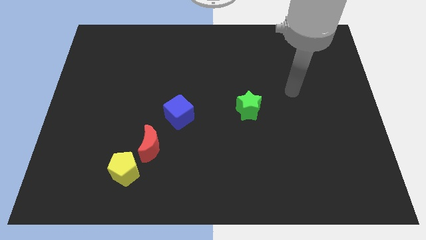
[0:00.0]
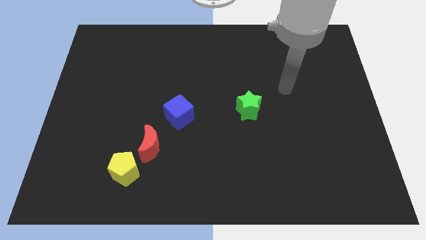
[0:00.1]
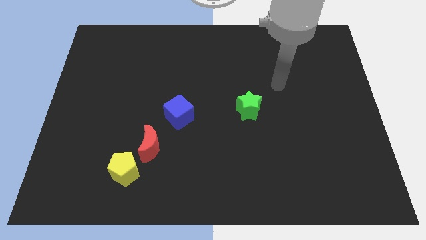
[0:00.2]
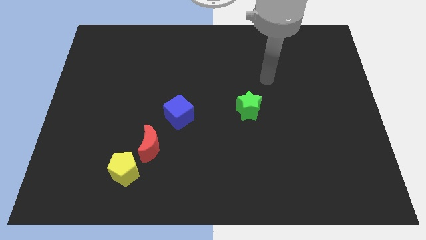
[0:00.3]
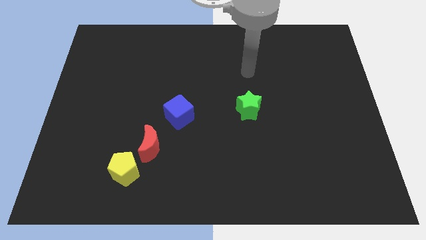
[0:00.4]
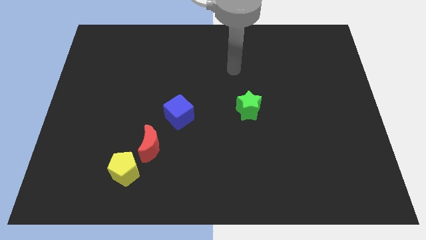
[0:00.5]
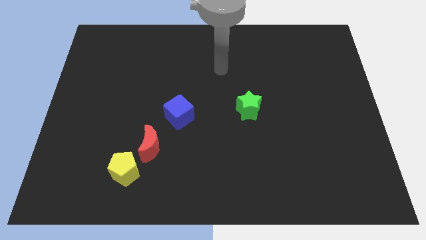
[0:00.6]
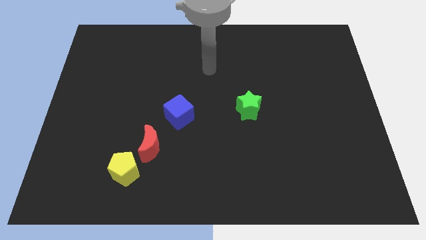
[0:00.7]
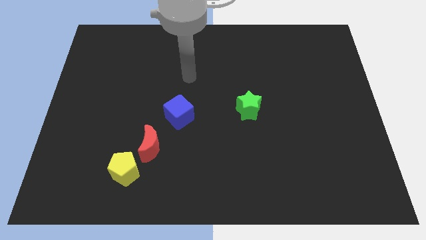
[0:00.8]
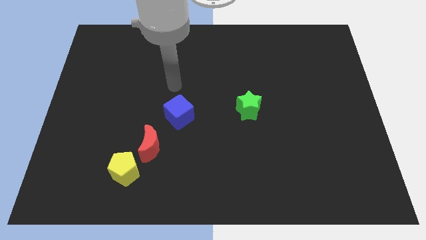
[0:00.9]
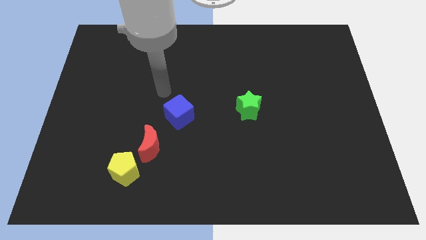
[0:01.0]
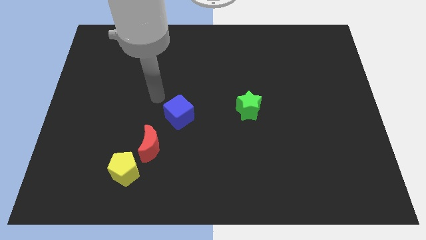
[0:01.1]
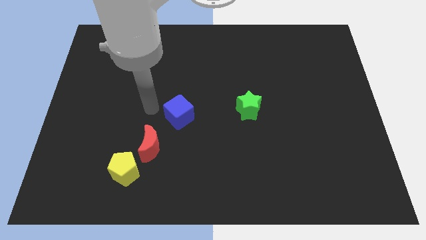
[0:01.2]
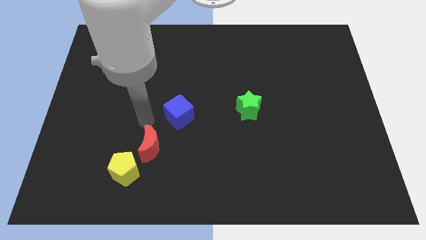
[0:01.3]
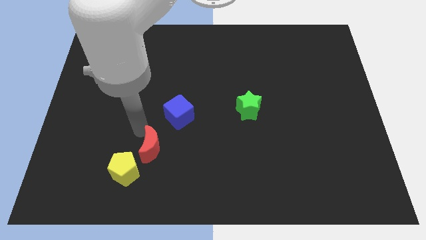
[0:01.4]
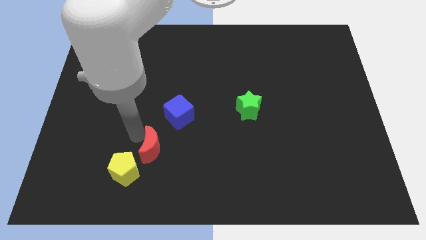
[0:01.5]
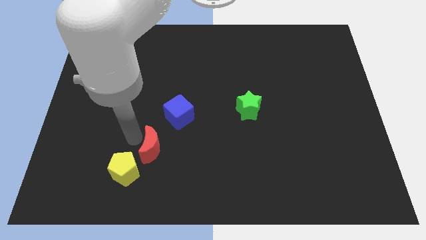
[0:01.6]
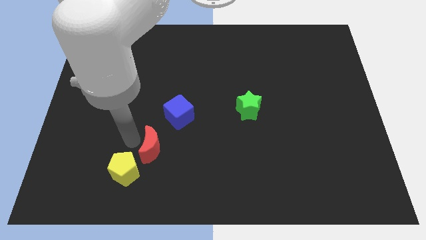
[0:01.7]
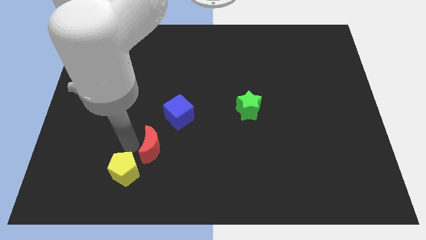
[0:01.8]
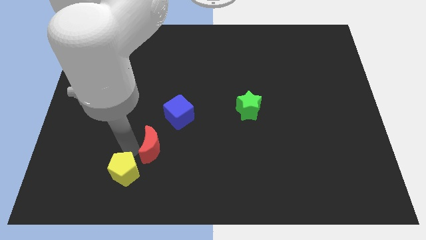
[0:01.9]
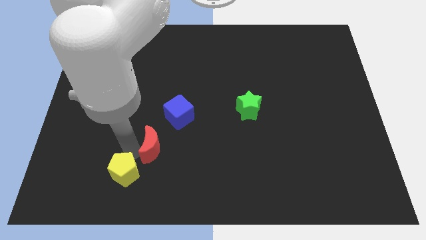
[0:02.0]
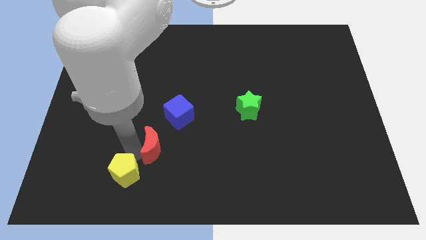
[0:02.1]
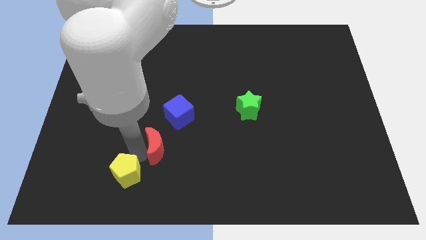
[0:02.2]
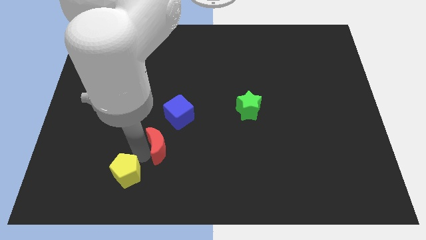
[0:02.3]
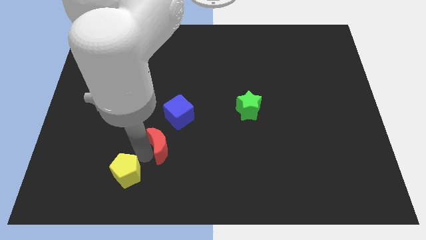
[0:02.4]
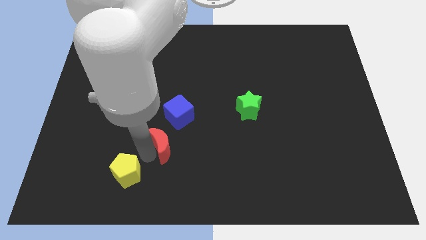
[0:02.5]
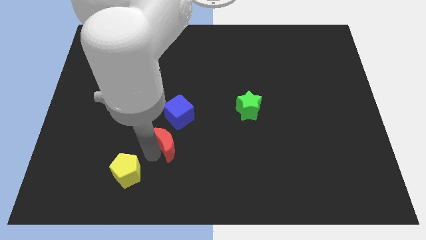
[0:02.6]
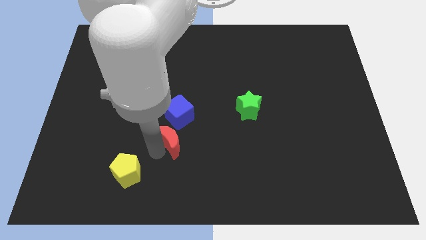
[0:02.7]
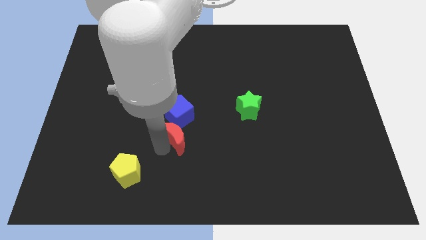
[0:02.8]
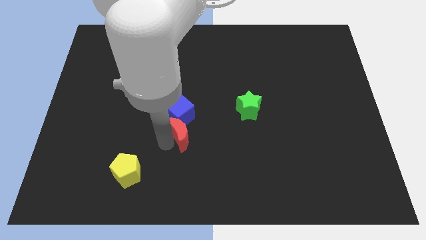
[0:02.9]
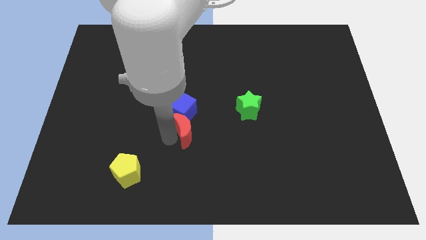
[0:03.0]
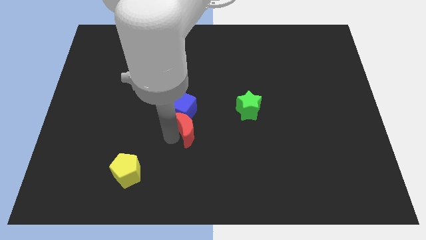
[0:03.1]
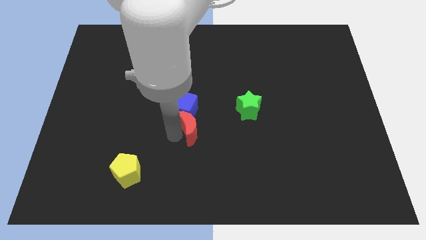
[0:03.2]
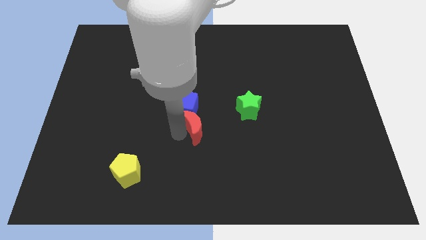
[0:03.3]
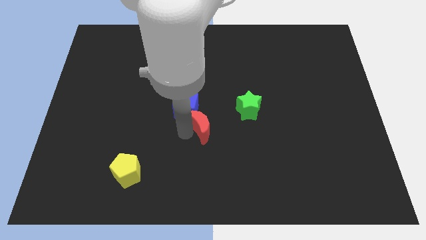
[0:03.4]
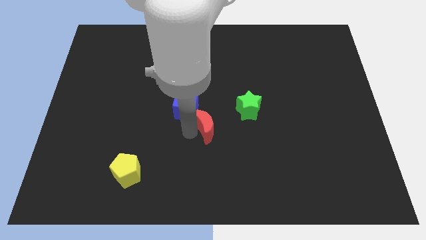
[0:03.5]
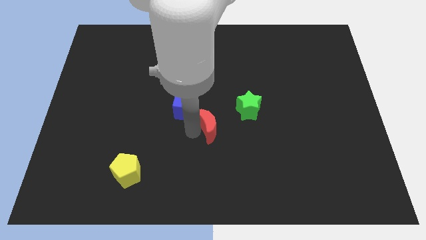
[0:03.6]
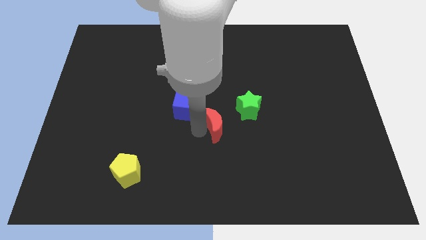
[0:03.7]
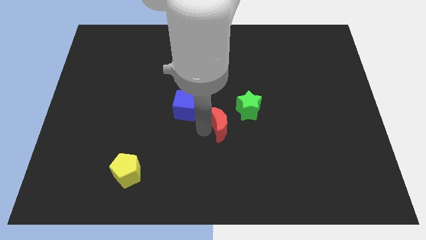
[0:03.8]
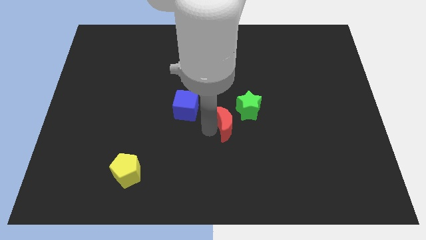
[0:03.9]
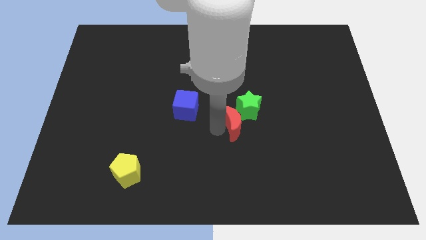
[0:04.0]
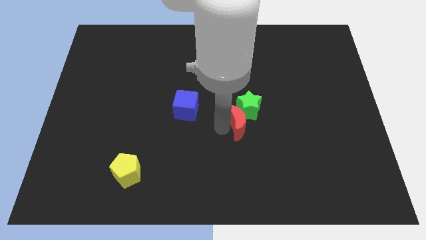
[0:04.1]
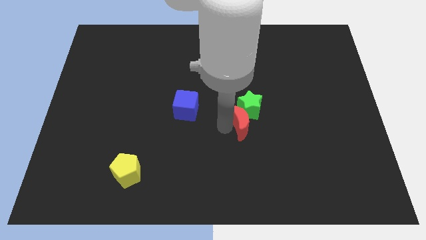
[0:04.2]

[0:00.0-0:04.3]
push the red block next to the star

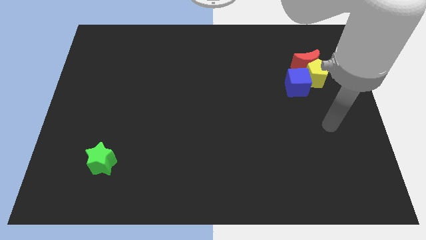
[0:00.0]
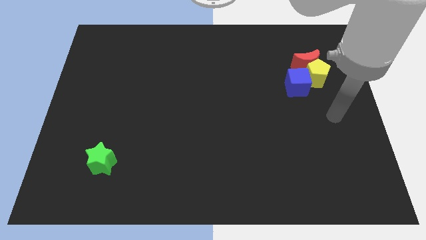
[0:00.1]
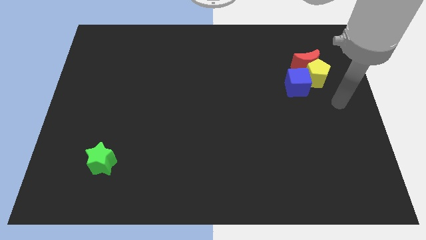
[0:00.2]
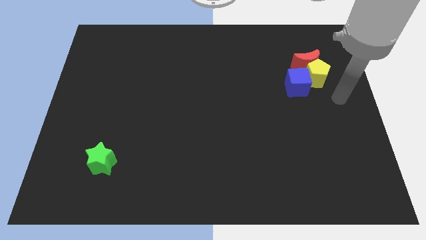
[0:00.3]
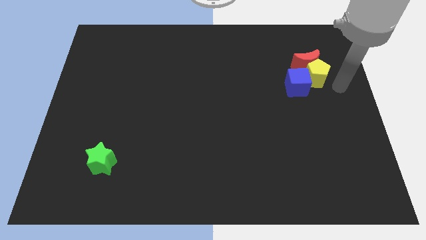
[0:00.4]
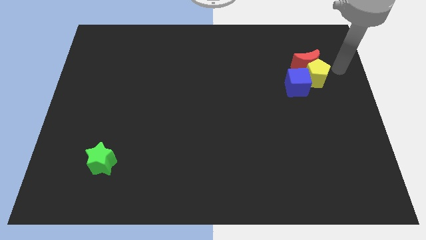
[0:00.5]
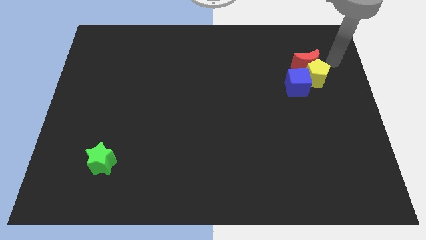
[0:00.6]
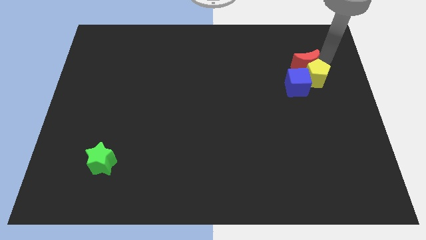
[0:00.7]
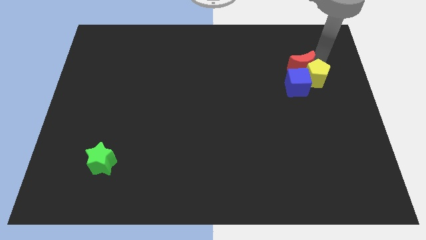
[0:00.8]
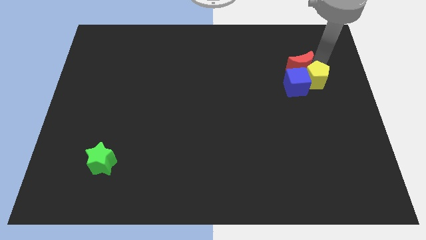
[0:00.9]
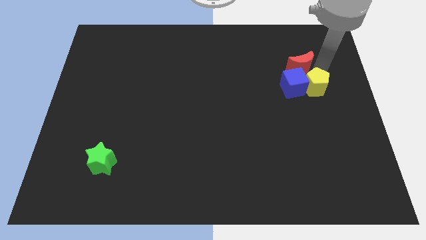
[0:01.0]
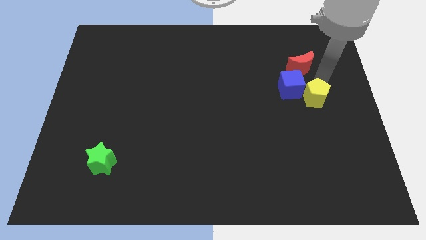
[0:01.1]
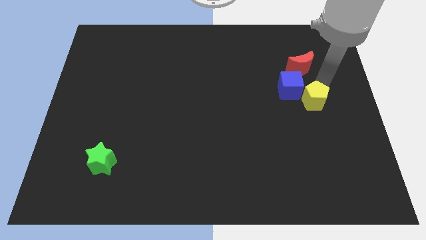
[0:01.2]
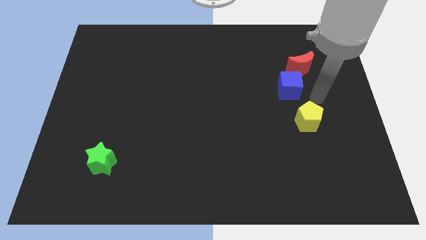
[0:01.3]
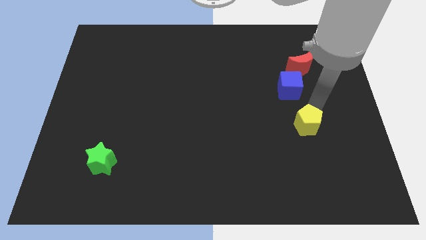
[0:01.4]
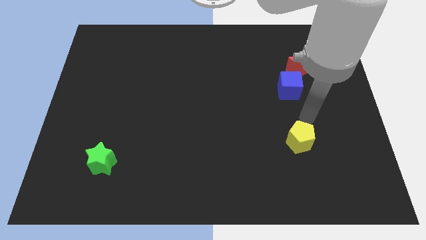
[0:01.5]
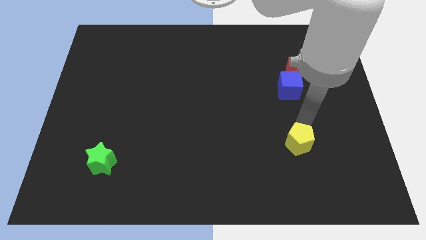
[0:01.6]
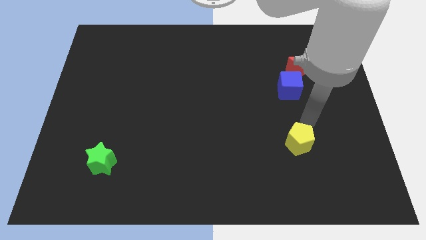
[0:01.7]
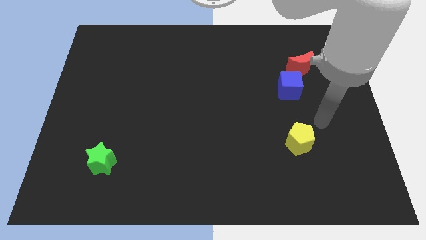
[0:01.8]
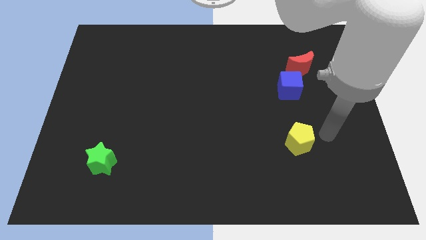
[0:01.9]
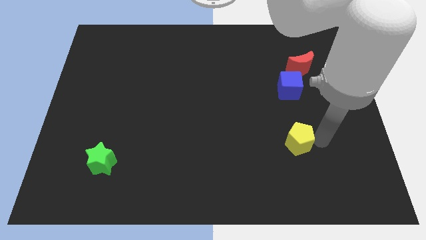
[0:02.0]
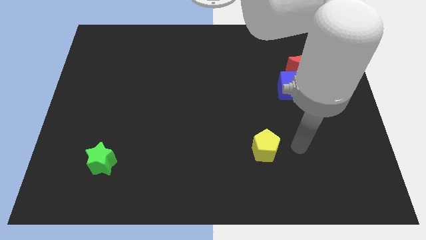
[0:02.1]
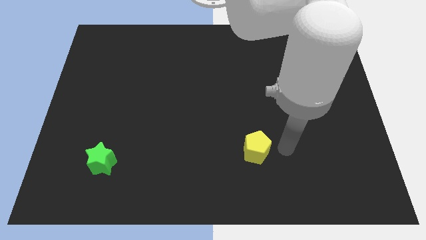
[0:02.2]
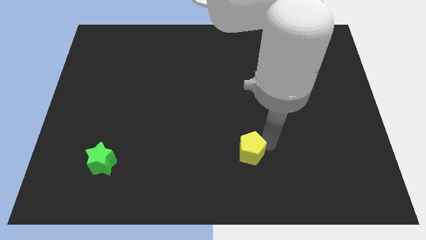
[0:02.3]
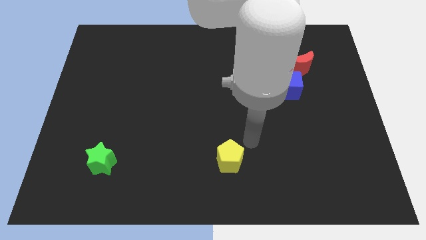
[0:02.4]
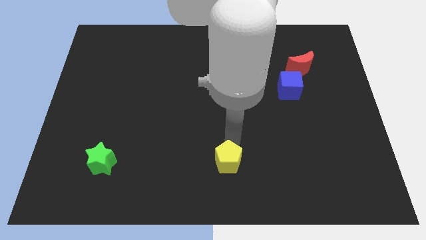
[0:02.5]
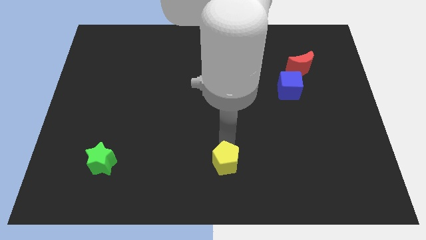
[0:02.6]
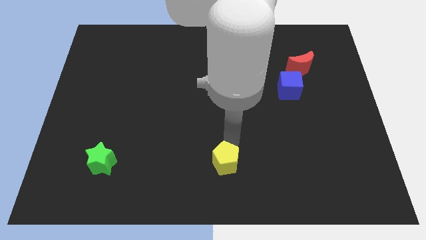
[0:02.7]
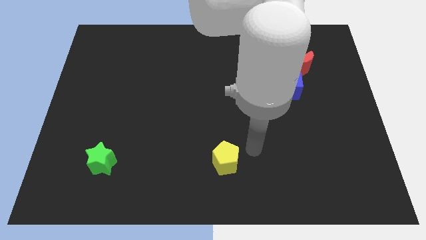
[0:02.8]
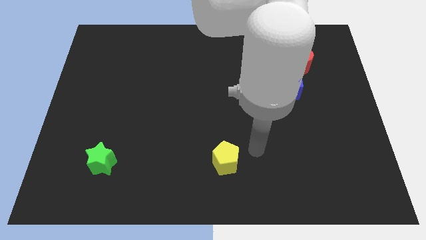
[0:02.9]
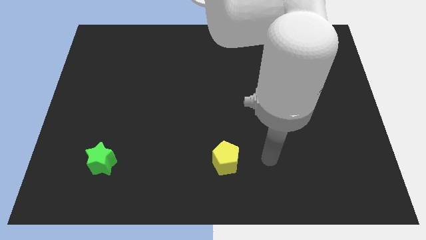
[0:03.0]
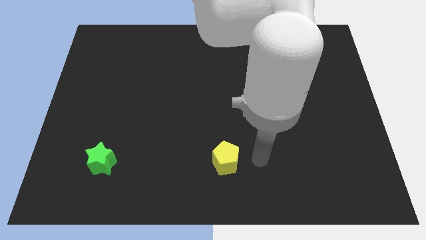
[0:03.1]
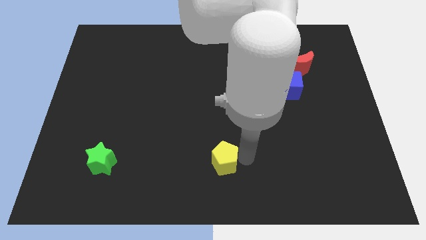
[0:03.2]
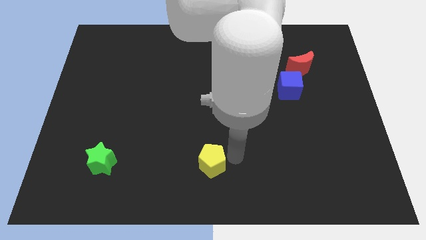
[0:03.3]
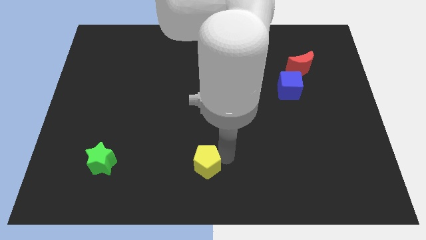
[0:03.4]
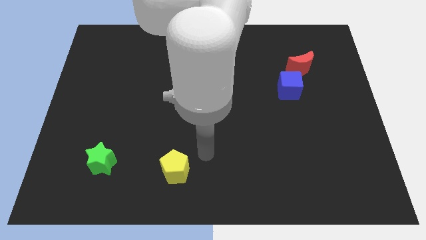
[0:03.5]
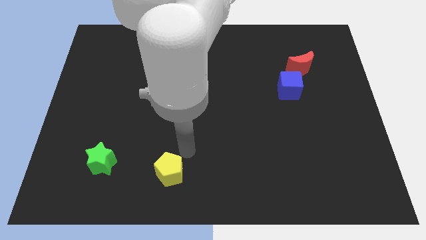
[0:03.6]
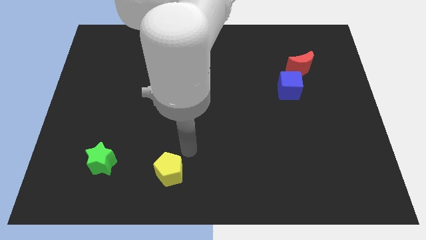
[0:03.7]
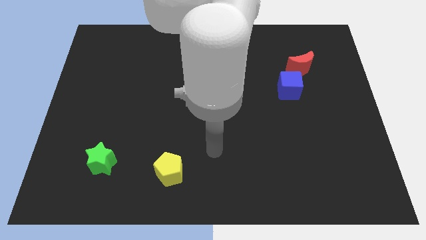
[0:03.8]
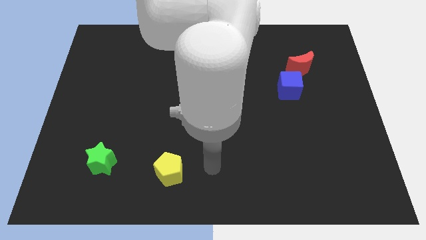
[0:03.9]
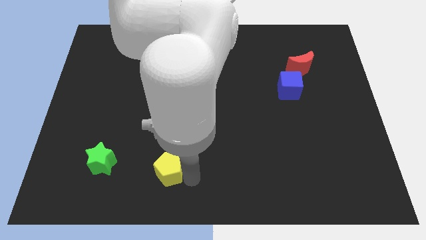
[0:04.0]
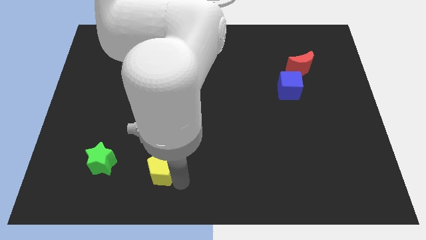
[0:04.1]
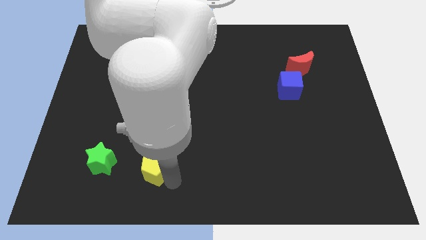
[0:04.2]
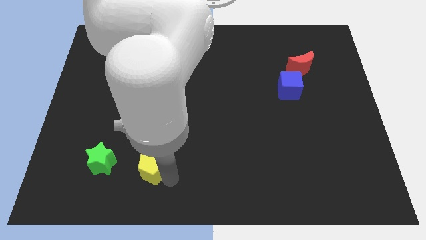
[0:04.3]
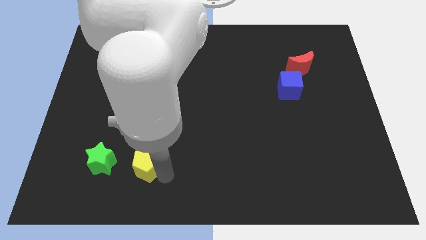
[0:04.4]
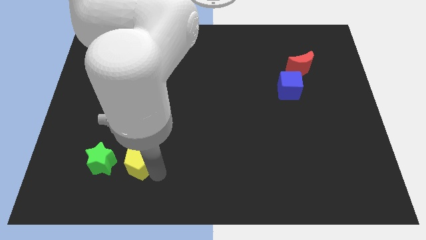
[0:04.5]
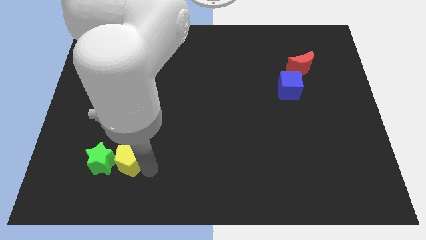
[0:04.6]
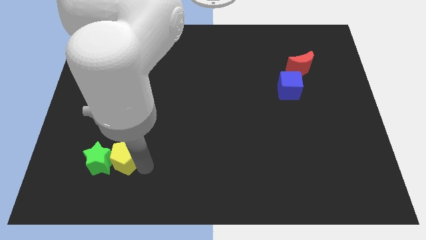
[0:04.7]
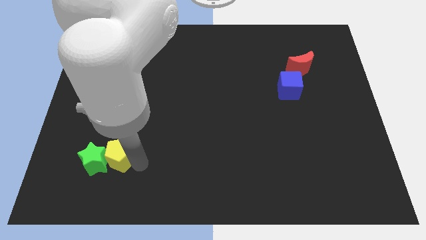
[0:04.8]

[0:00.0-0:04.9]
slide the yellow block close to the star
